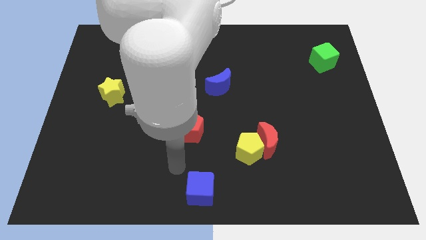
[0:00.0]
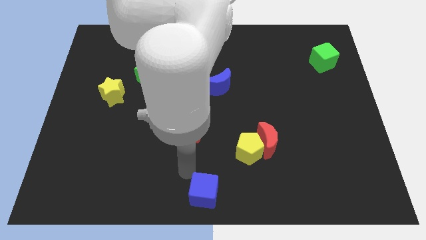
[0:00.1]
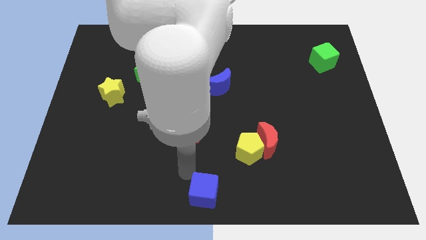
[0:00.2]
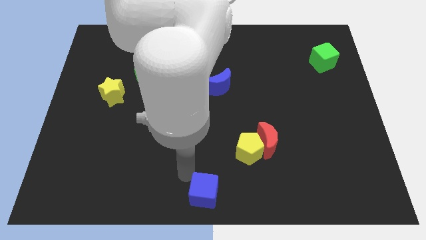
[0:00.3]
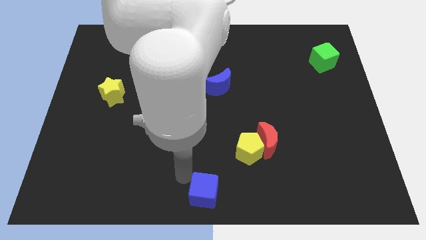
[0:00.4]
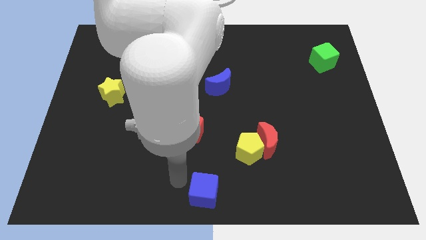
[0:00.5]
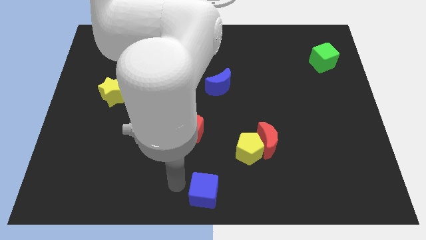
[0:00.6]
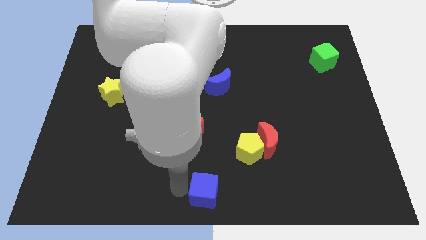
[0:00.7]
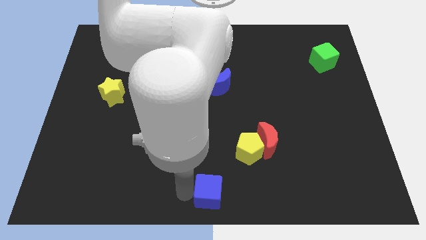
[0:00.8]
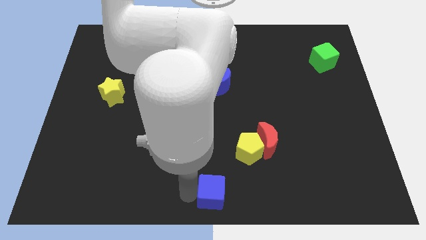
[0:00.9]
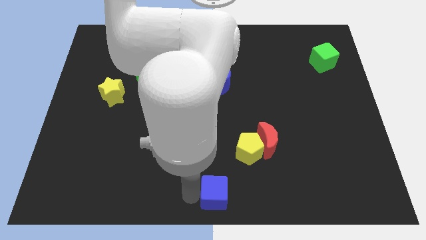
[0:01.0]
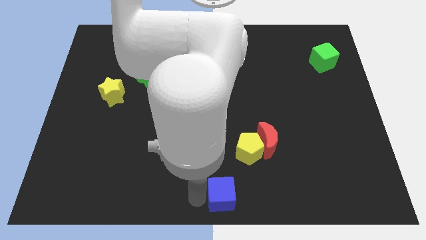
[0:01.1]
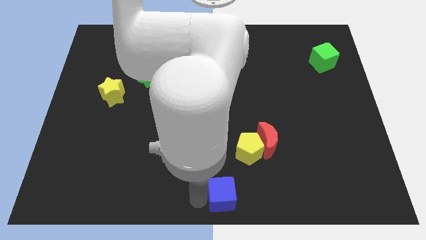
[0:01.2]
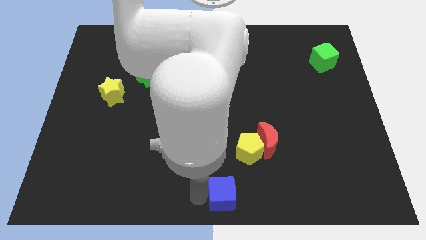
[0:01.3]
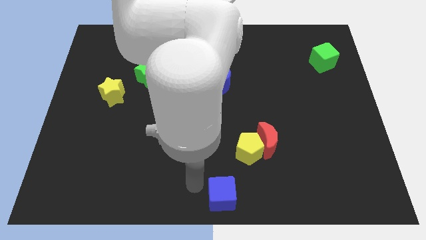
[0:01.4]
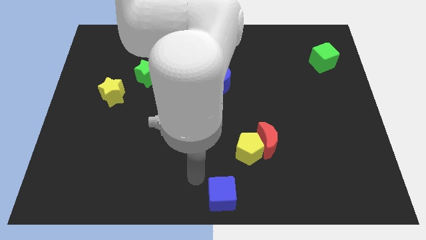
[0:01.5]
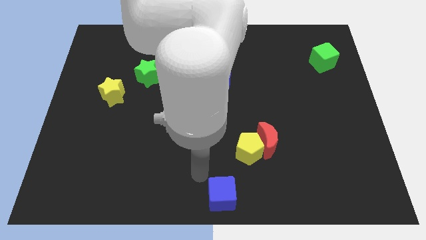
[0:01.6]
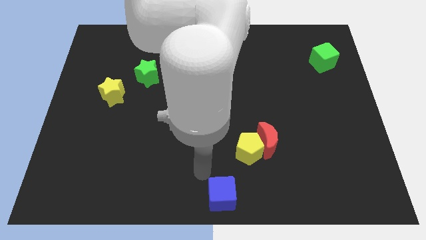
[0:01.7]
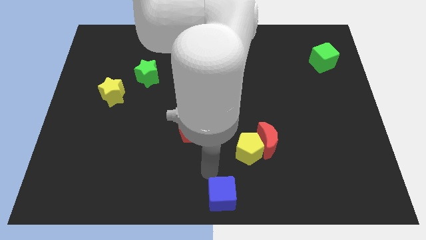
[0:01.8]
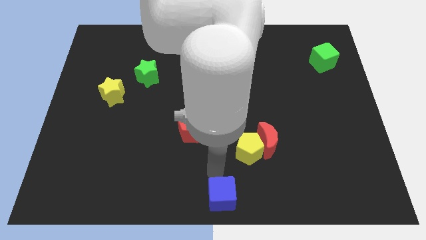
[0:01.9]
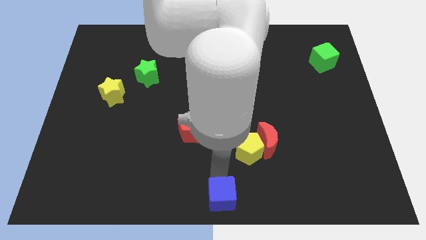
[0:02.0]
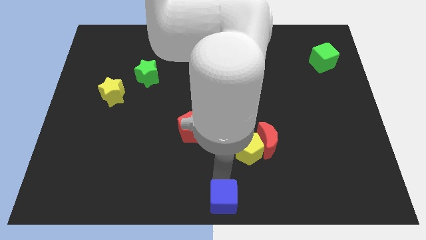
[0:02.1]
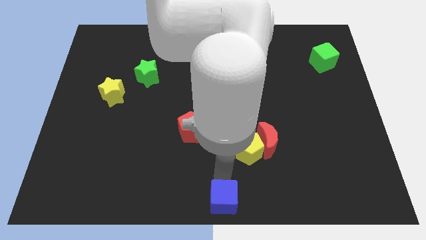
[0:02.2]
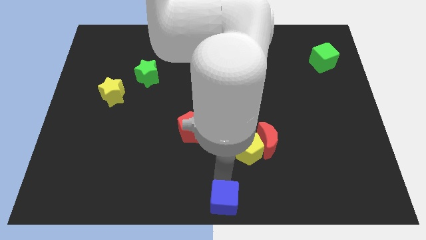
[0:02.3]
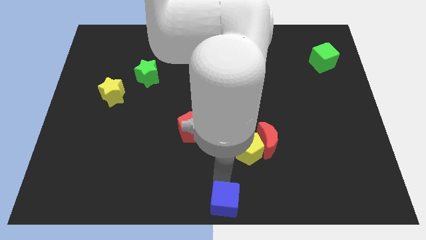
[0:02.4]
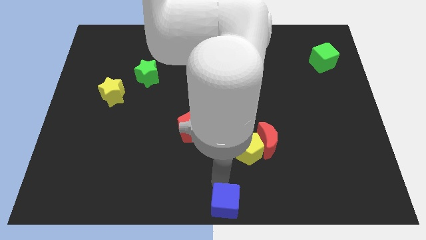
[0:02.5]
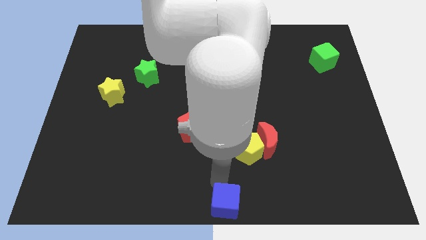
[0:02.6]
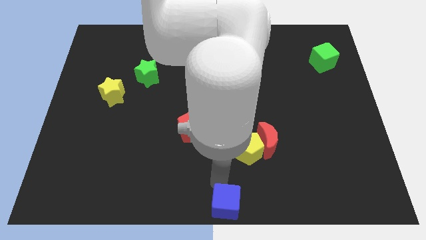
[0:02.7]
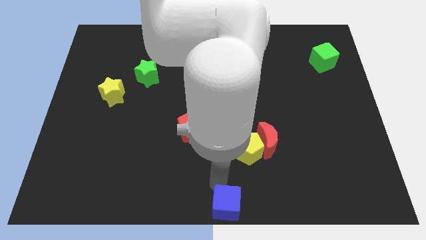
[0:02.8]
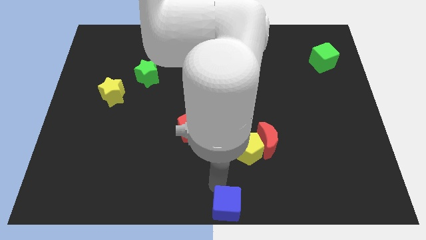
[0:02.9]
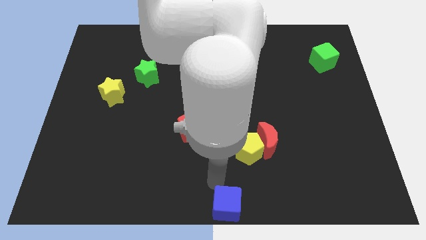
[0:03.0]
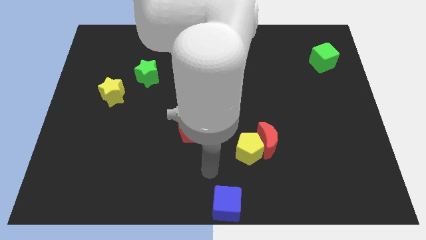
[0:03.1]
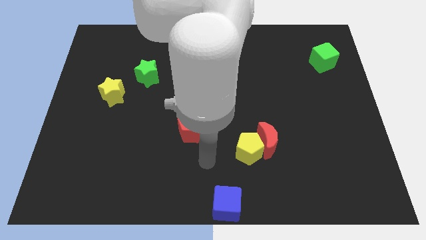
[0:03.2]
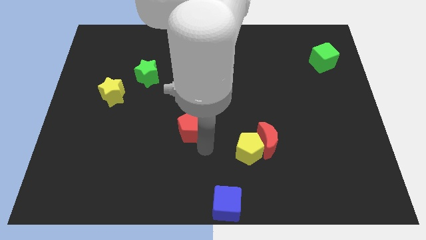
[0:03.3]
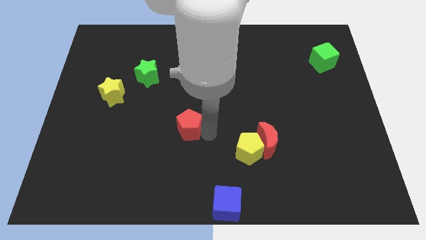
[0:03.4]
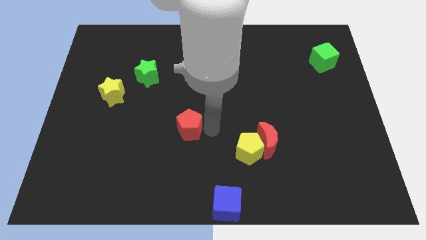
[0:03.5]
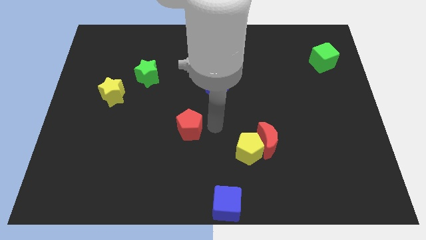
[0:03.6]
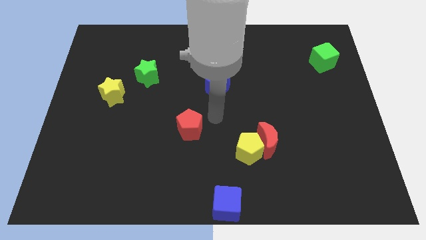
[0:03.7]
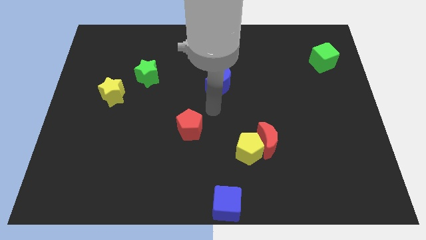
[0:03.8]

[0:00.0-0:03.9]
slide the blue cube diagonally bottom right to the red pentagon

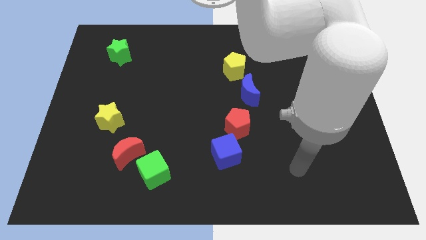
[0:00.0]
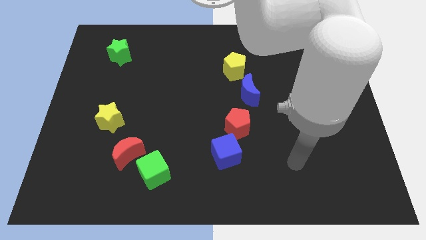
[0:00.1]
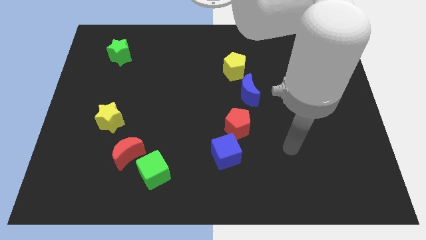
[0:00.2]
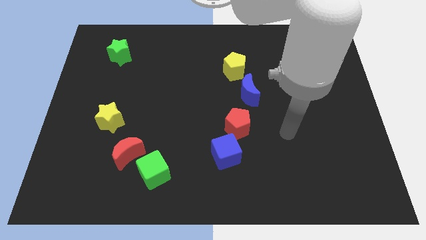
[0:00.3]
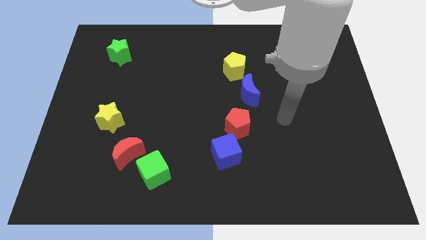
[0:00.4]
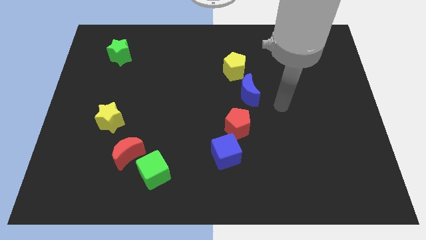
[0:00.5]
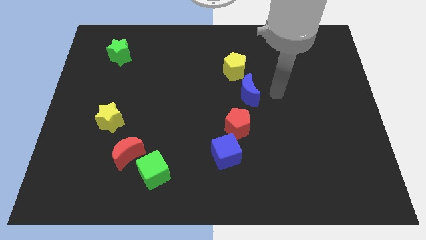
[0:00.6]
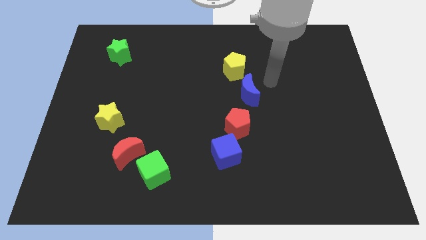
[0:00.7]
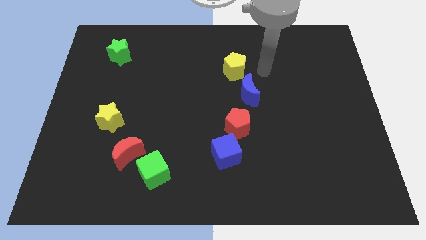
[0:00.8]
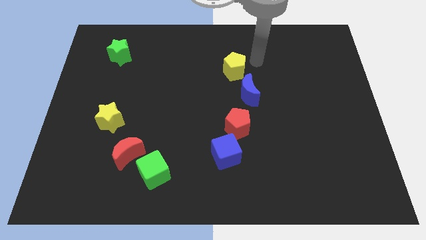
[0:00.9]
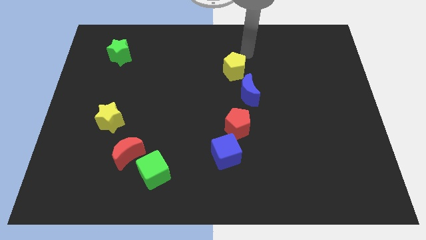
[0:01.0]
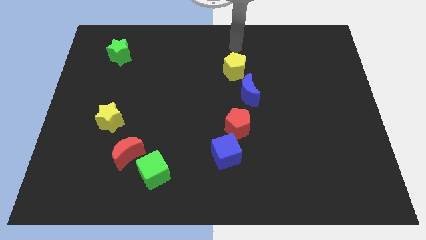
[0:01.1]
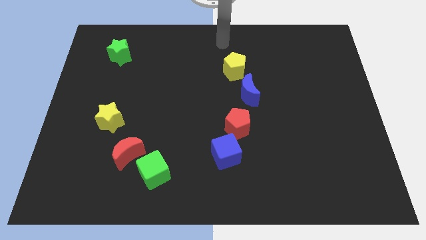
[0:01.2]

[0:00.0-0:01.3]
place your hand at the top side of the yellow pentagon

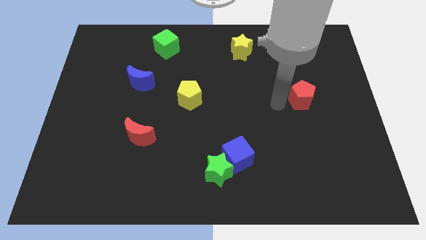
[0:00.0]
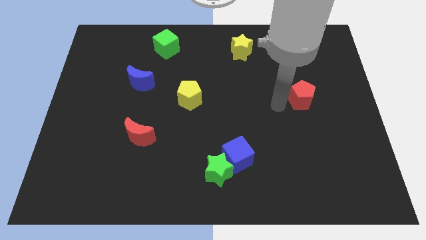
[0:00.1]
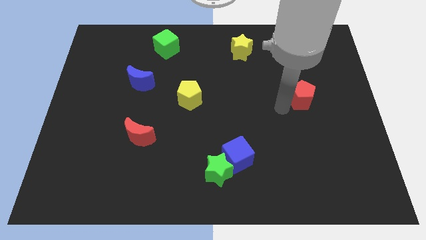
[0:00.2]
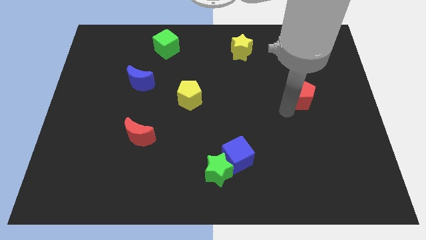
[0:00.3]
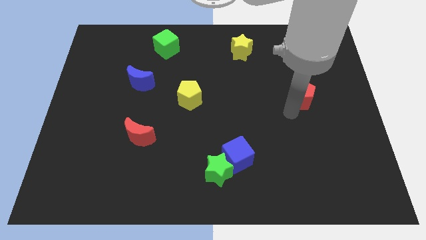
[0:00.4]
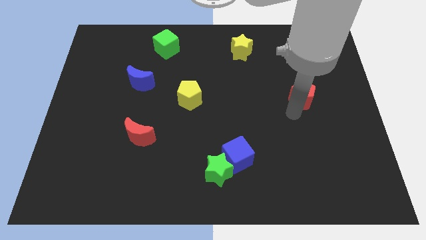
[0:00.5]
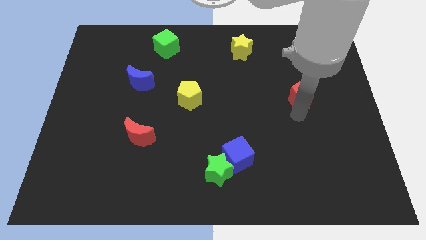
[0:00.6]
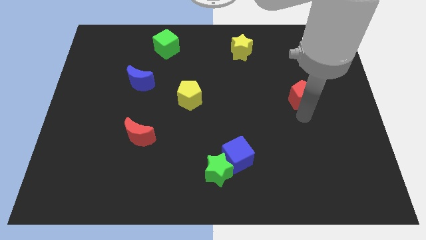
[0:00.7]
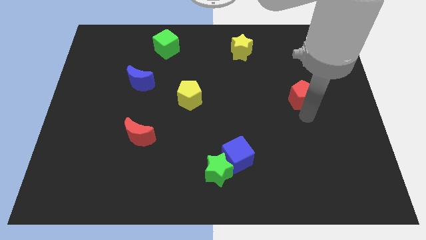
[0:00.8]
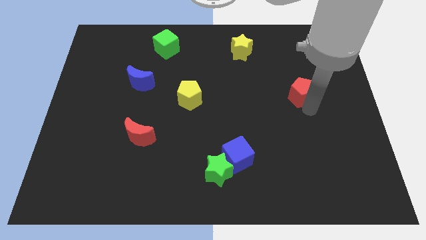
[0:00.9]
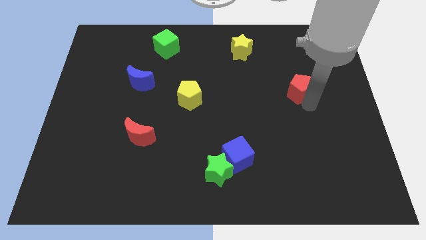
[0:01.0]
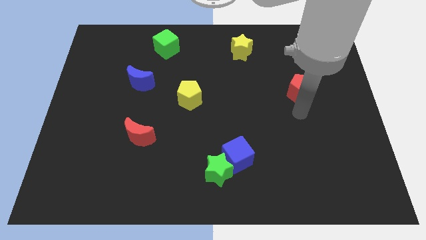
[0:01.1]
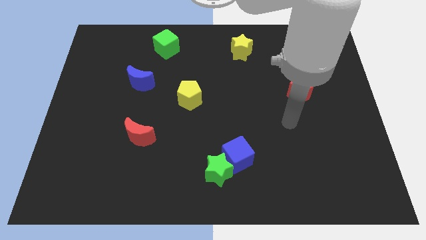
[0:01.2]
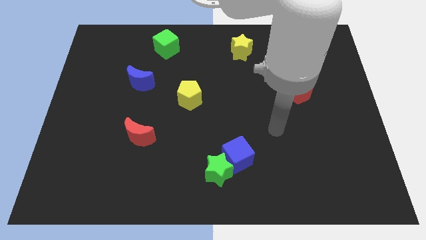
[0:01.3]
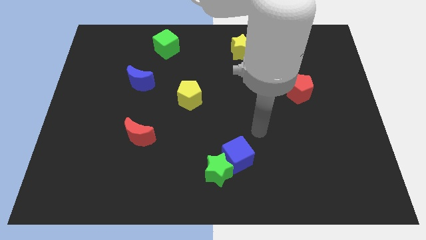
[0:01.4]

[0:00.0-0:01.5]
push the red pentagon upwards slightly

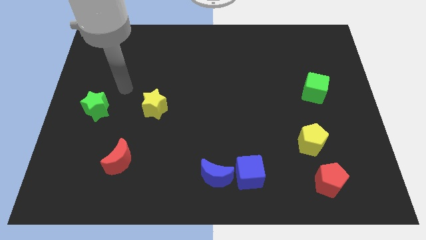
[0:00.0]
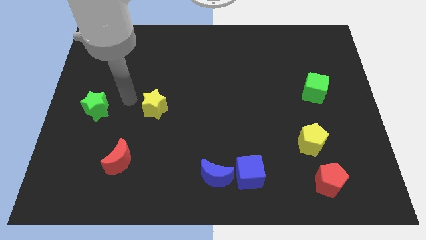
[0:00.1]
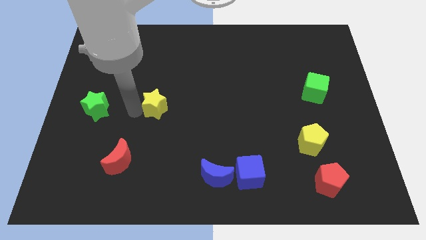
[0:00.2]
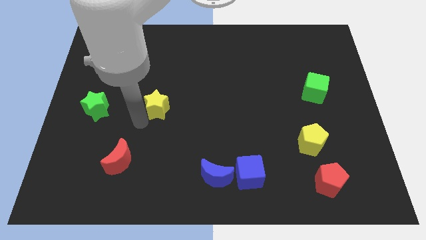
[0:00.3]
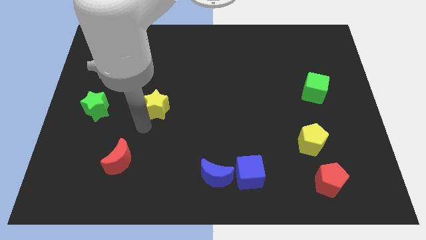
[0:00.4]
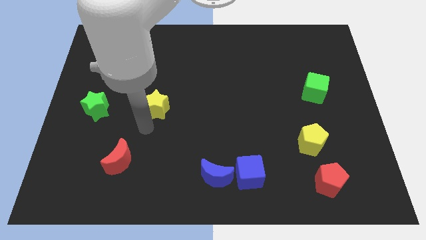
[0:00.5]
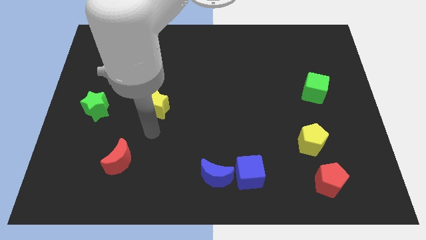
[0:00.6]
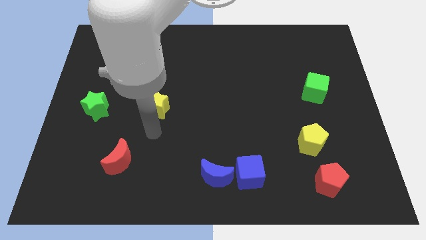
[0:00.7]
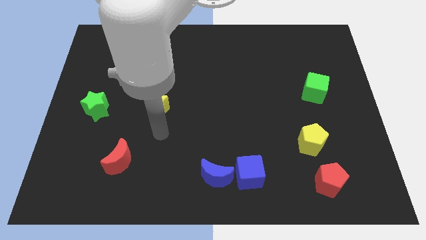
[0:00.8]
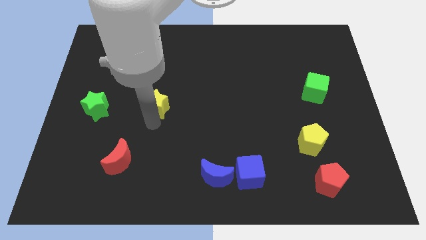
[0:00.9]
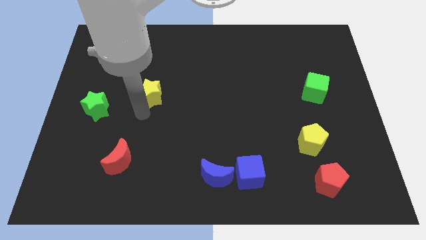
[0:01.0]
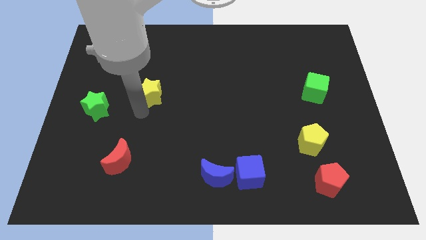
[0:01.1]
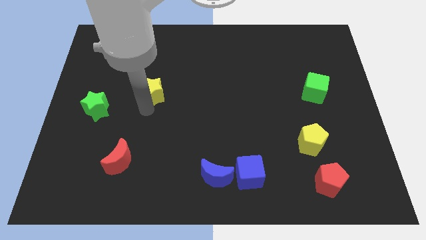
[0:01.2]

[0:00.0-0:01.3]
move the arm to the yellow star

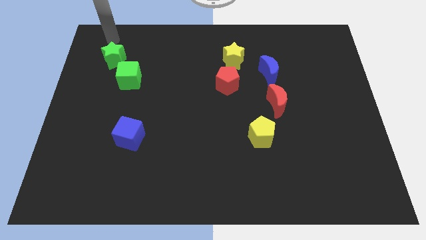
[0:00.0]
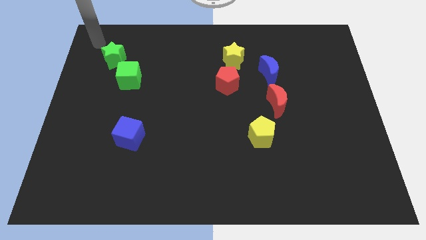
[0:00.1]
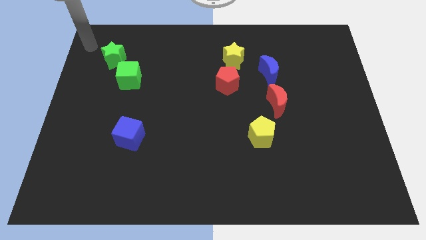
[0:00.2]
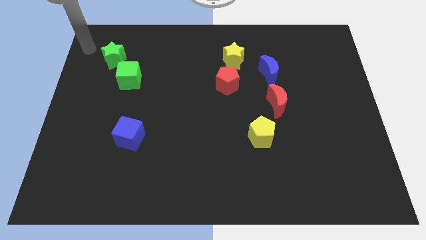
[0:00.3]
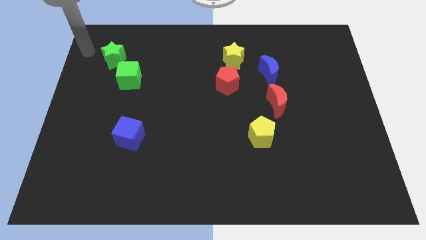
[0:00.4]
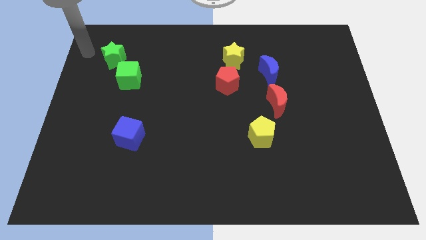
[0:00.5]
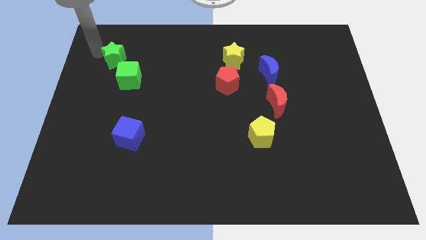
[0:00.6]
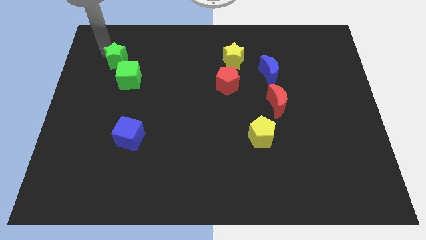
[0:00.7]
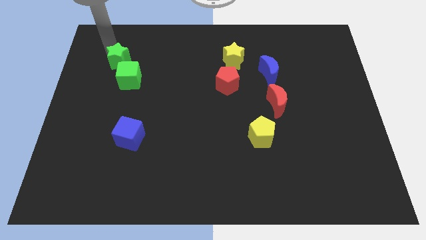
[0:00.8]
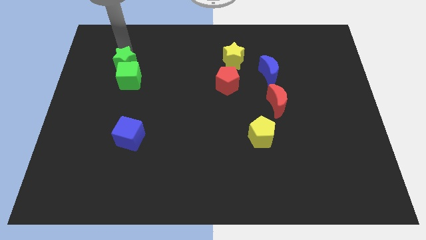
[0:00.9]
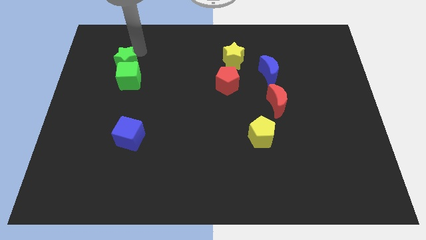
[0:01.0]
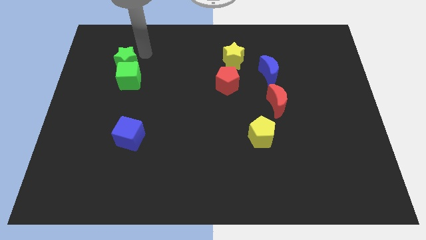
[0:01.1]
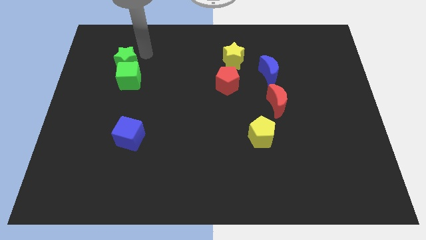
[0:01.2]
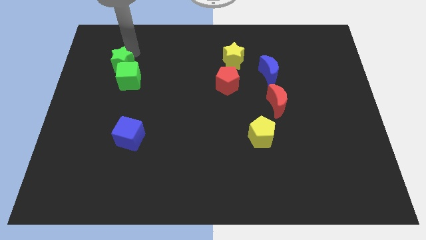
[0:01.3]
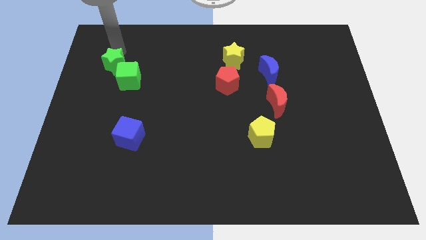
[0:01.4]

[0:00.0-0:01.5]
move the green star into the green cube
